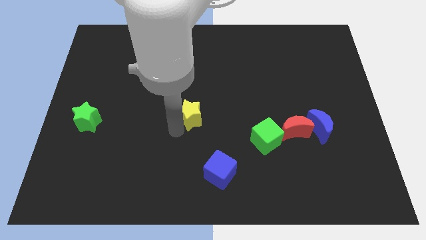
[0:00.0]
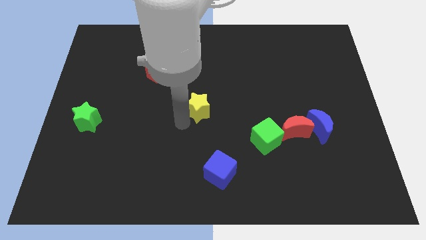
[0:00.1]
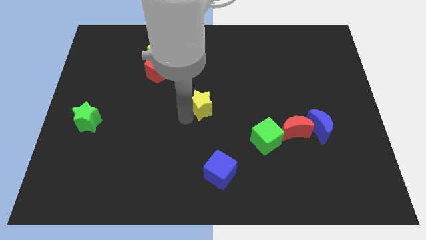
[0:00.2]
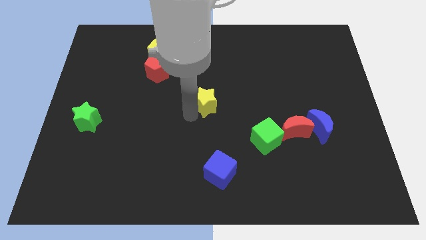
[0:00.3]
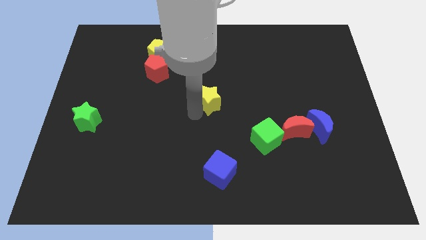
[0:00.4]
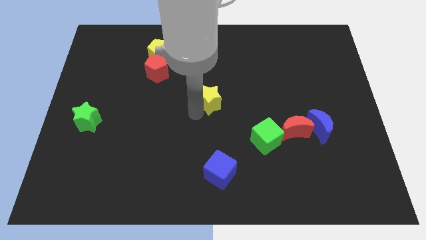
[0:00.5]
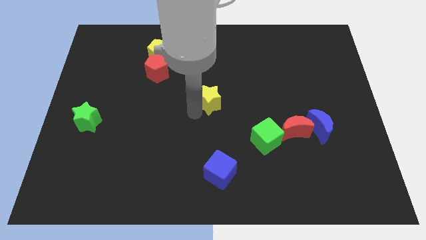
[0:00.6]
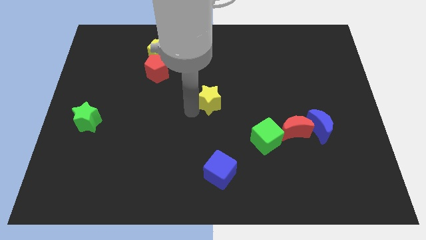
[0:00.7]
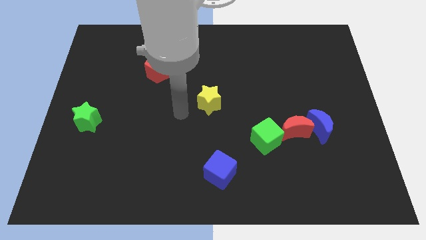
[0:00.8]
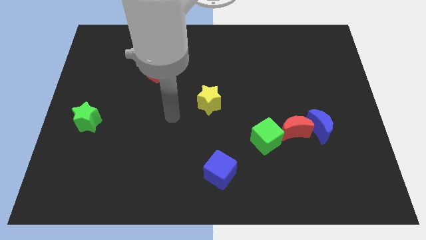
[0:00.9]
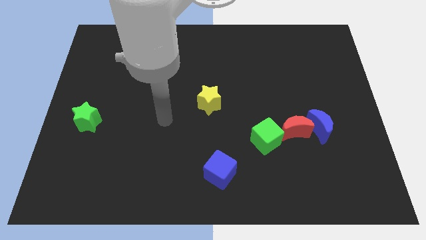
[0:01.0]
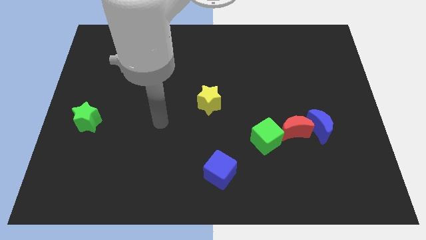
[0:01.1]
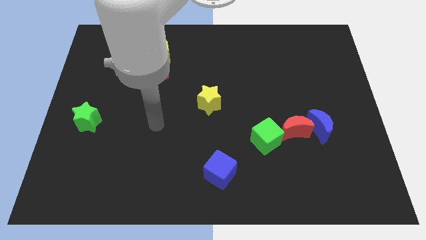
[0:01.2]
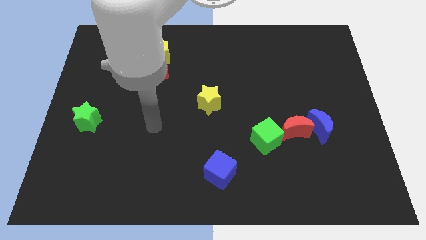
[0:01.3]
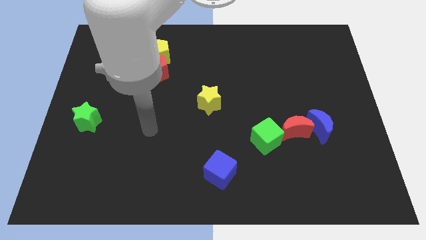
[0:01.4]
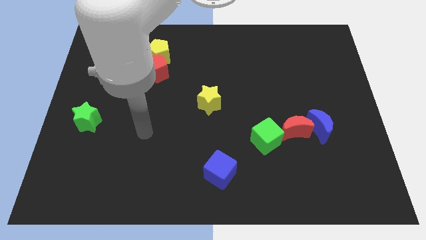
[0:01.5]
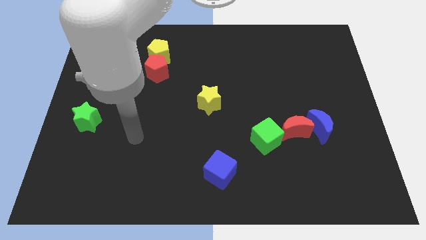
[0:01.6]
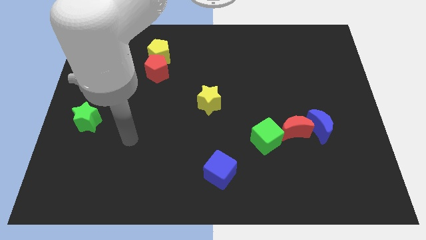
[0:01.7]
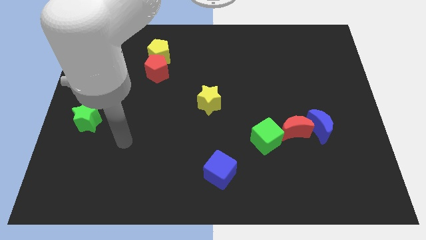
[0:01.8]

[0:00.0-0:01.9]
move the yellow star to the center of the board

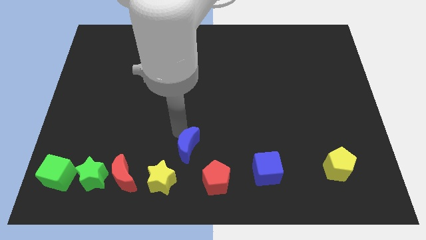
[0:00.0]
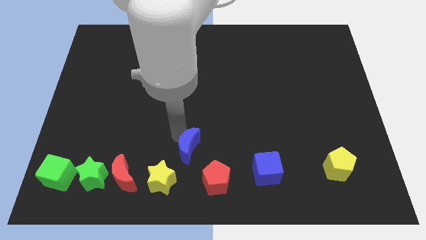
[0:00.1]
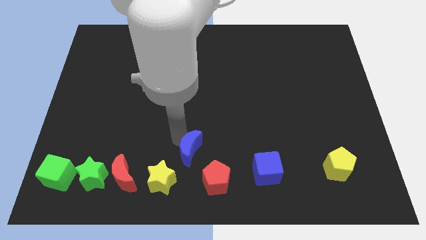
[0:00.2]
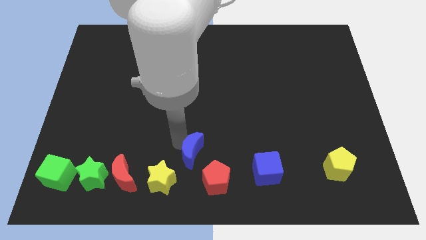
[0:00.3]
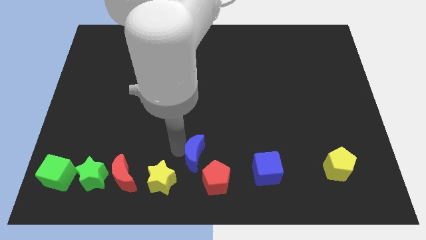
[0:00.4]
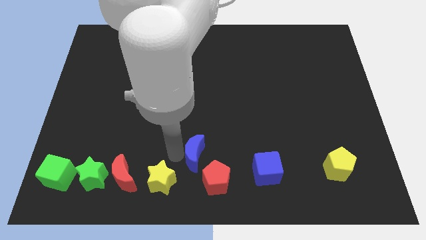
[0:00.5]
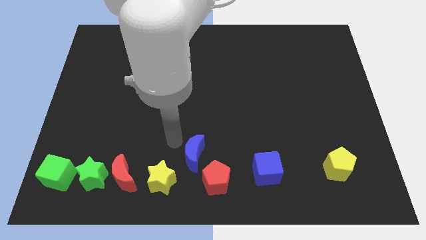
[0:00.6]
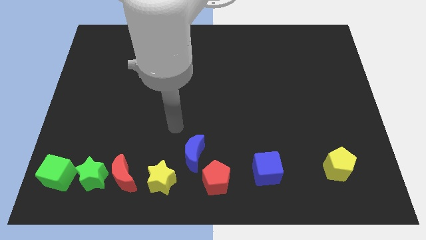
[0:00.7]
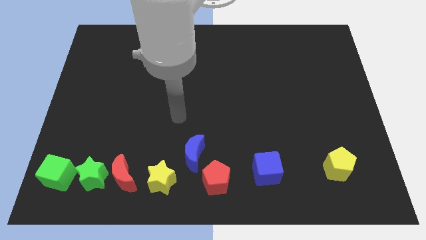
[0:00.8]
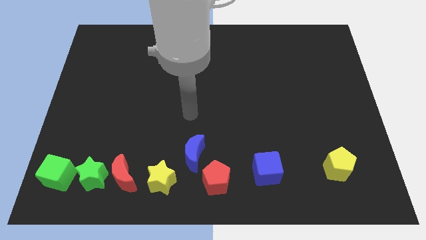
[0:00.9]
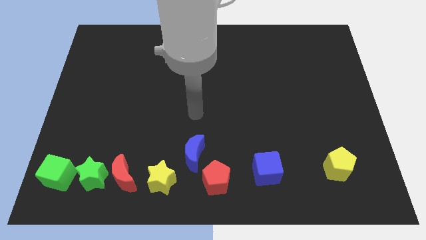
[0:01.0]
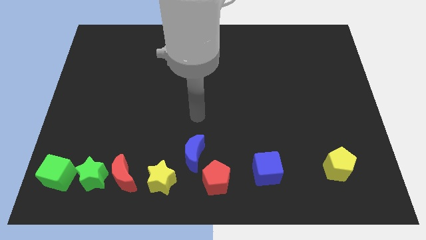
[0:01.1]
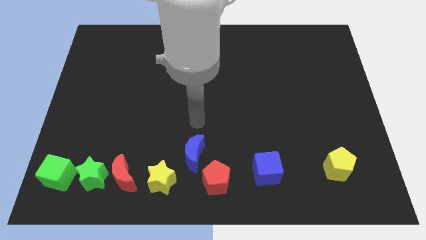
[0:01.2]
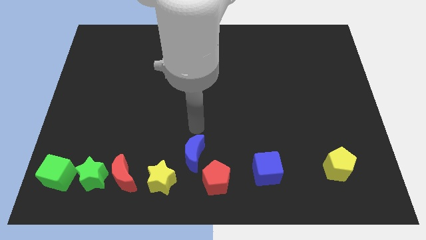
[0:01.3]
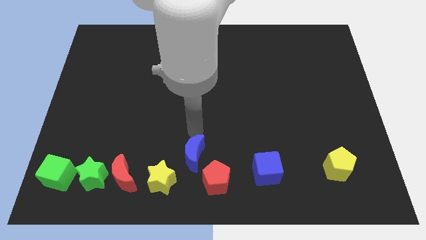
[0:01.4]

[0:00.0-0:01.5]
push the blue moon diagonal to the yellow star

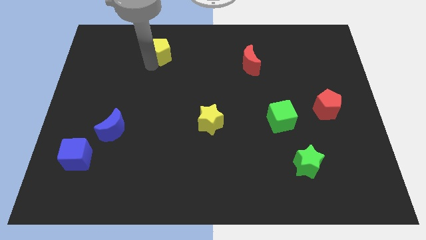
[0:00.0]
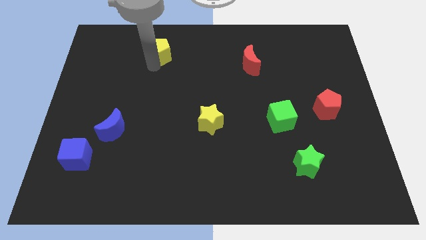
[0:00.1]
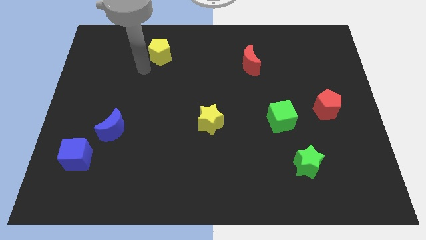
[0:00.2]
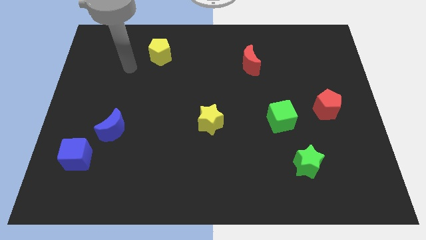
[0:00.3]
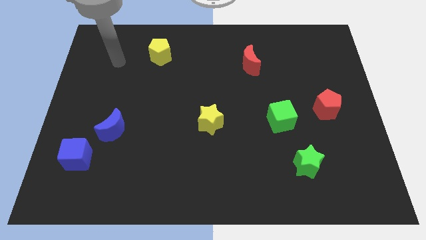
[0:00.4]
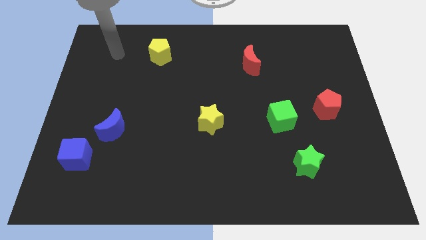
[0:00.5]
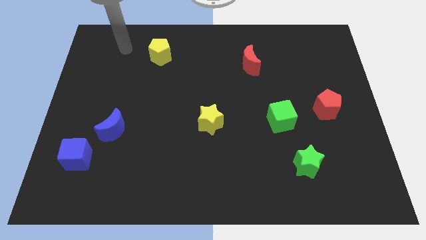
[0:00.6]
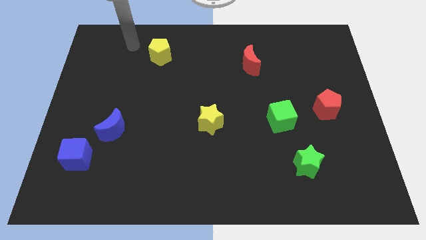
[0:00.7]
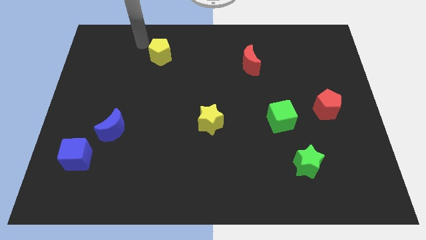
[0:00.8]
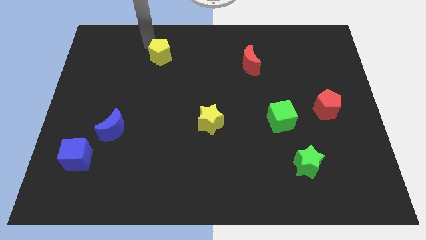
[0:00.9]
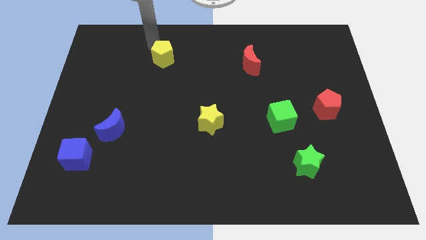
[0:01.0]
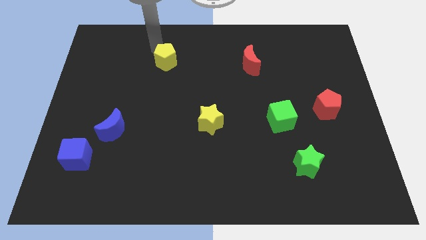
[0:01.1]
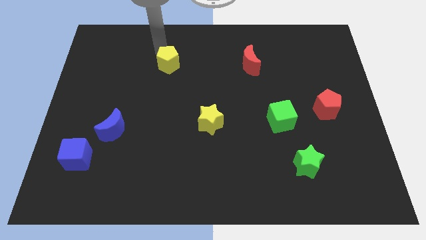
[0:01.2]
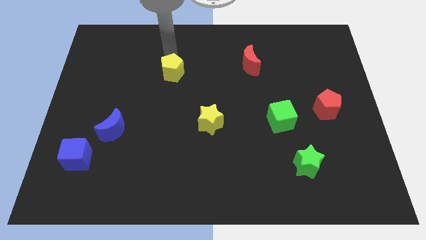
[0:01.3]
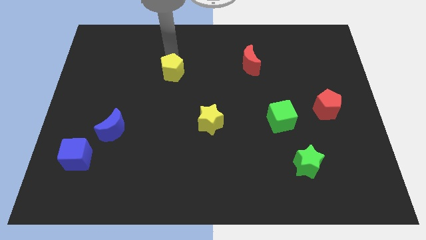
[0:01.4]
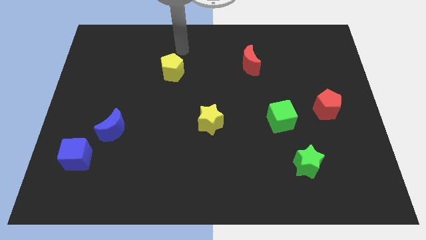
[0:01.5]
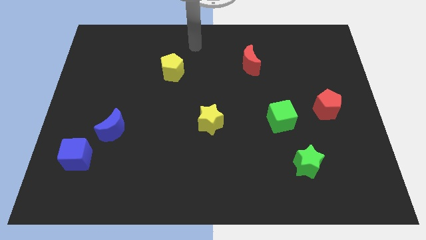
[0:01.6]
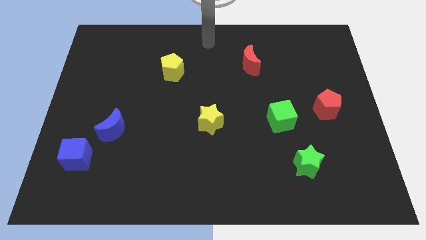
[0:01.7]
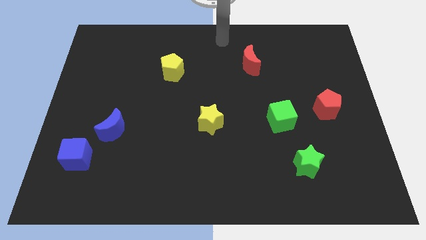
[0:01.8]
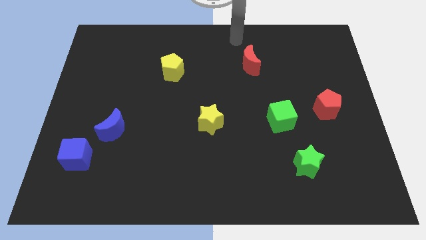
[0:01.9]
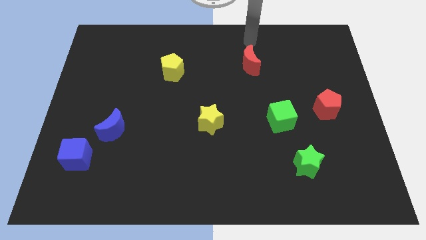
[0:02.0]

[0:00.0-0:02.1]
move the yellow pentagon slightly to bottom side

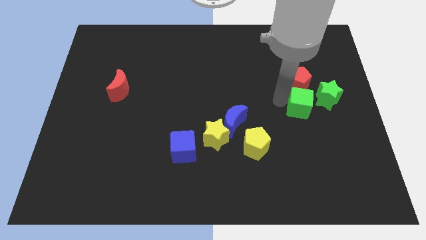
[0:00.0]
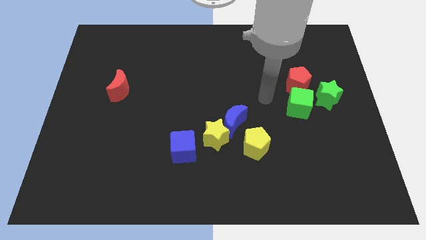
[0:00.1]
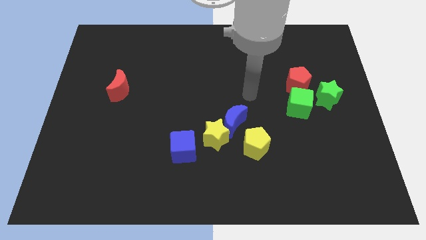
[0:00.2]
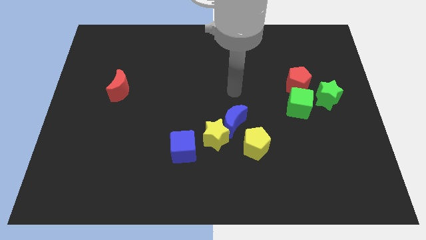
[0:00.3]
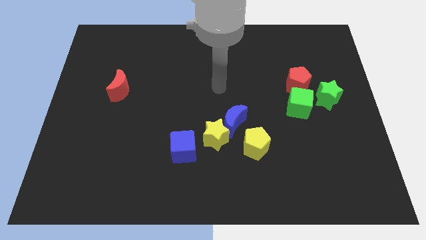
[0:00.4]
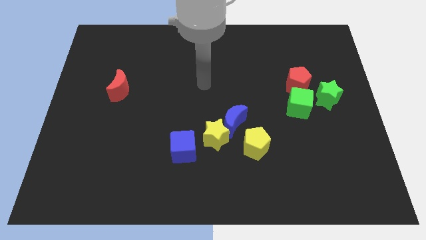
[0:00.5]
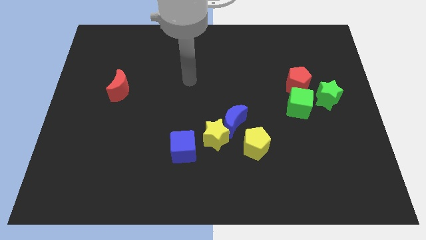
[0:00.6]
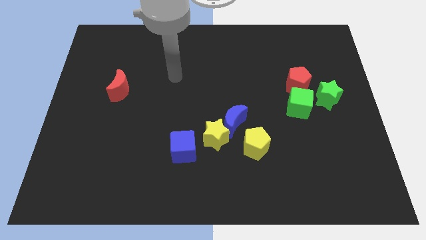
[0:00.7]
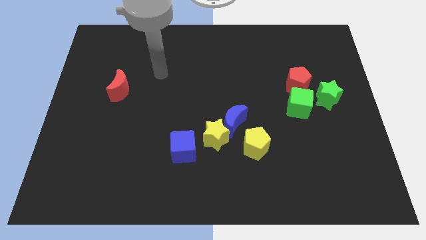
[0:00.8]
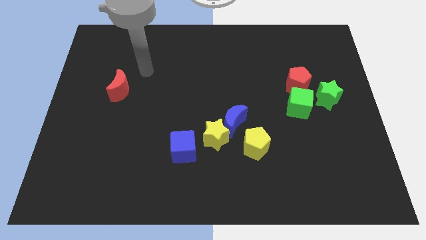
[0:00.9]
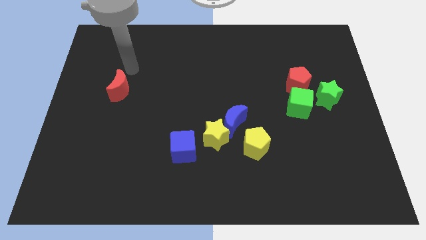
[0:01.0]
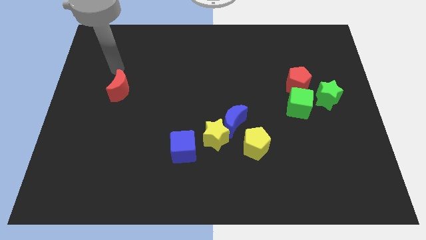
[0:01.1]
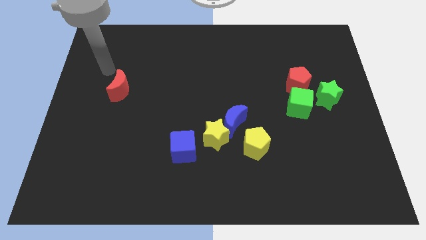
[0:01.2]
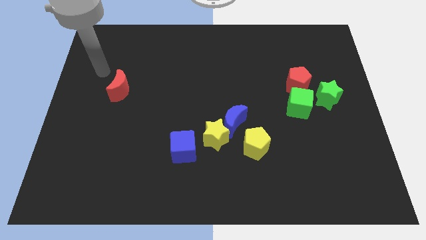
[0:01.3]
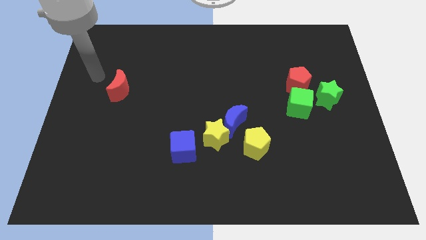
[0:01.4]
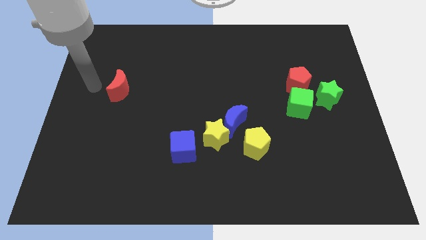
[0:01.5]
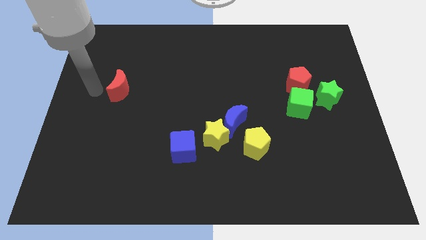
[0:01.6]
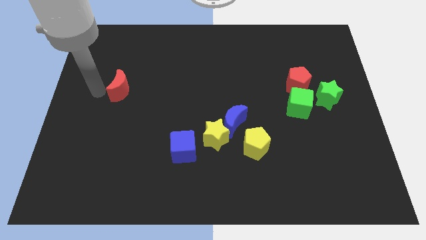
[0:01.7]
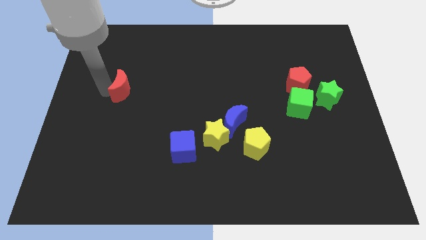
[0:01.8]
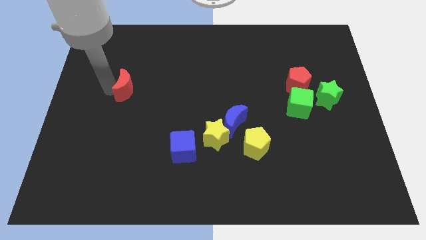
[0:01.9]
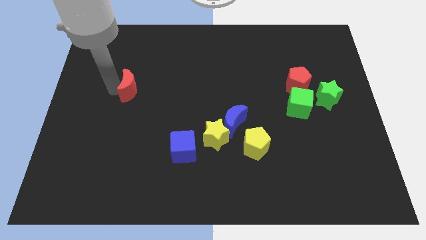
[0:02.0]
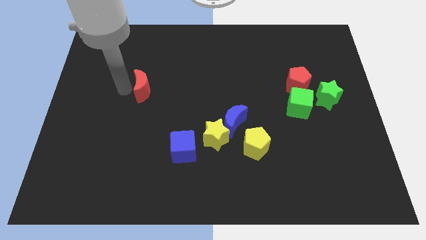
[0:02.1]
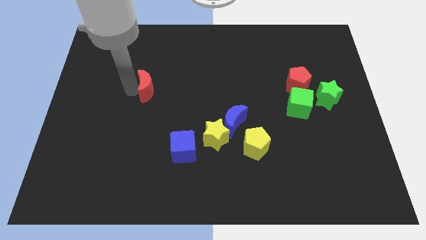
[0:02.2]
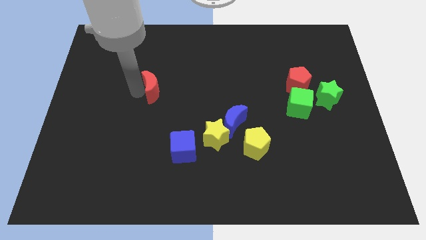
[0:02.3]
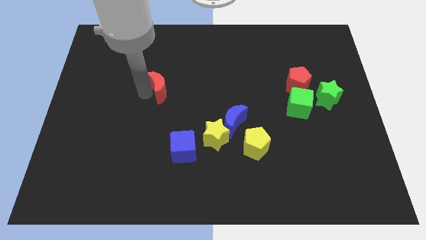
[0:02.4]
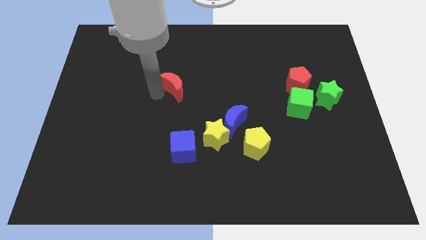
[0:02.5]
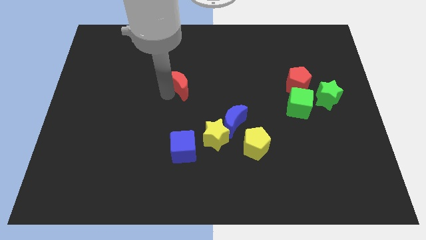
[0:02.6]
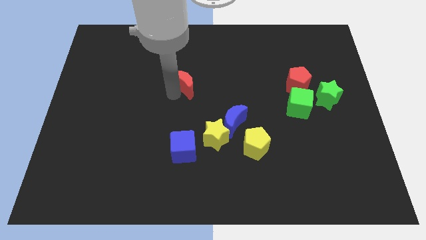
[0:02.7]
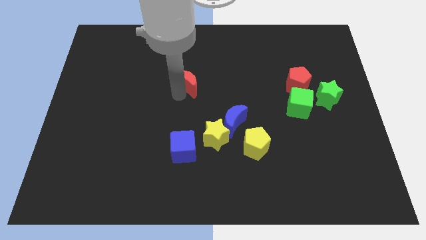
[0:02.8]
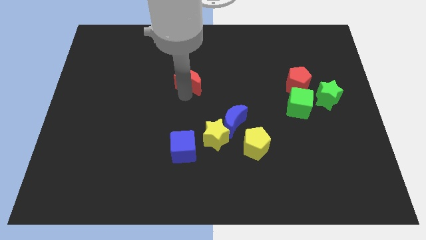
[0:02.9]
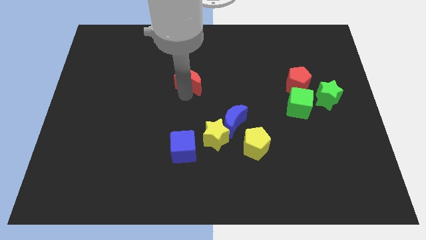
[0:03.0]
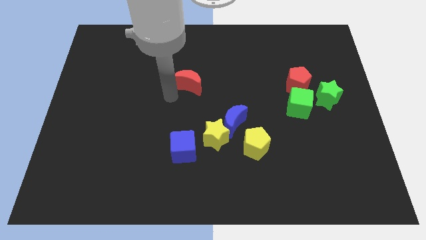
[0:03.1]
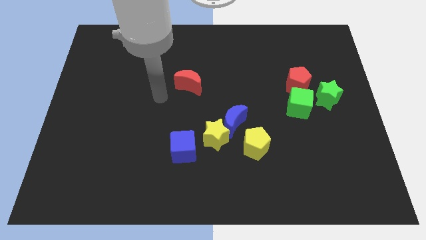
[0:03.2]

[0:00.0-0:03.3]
put the red moon vertically above the blue cube
